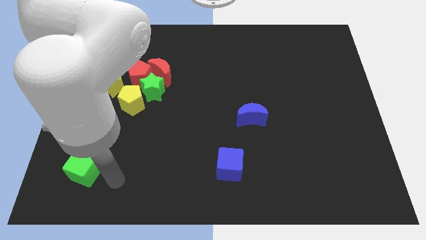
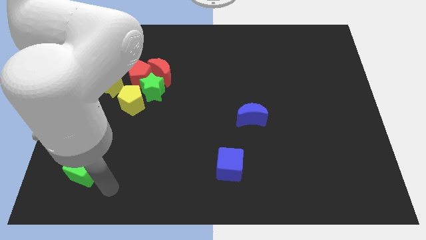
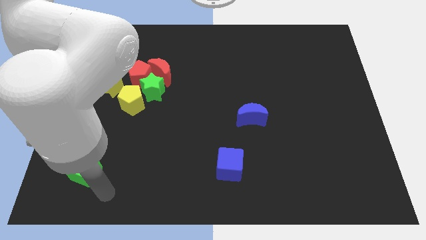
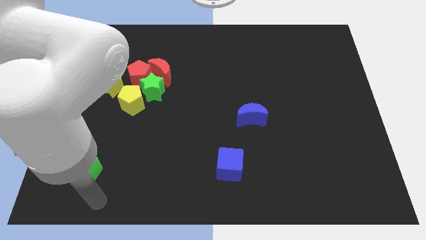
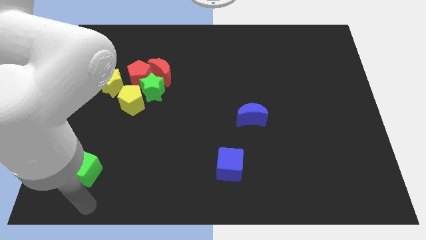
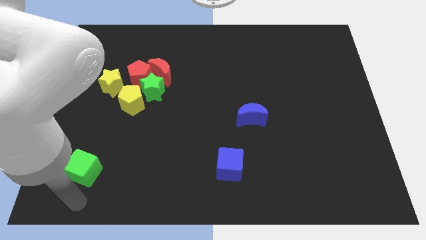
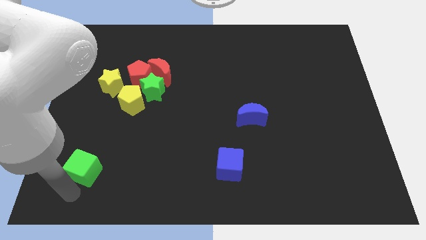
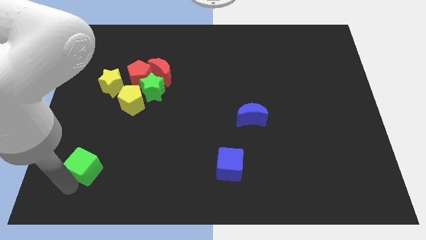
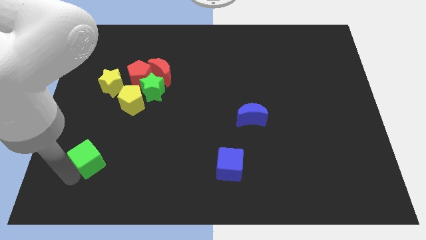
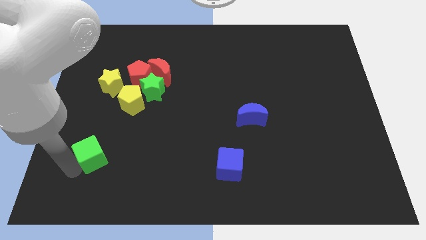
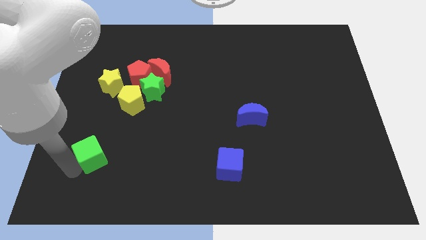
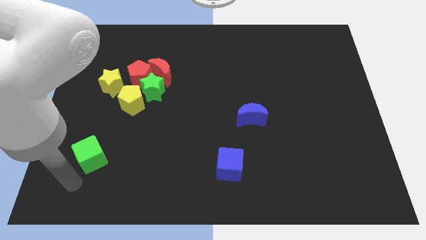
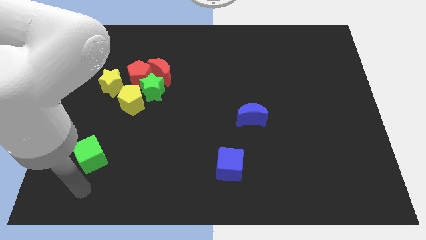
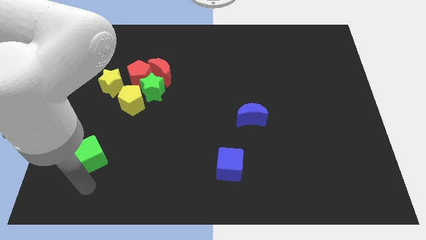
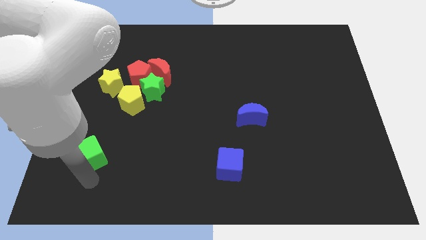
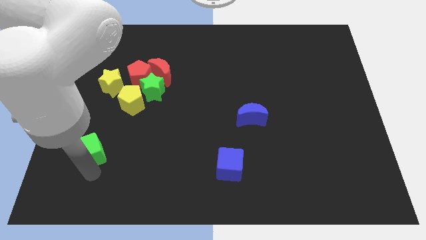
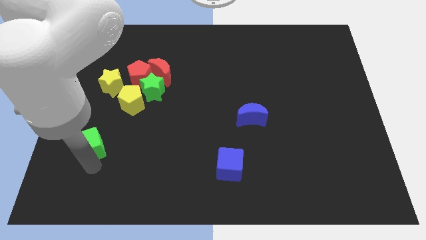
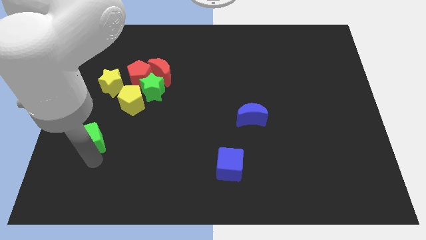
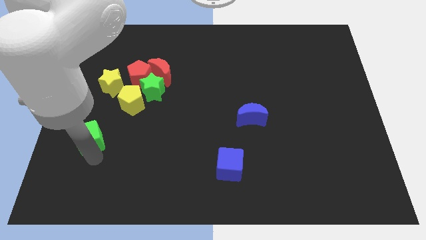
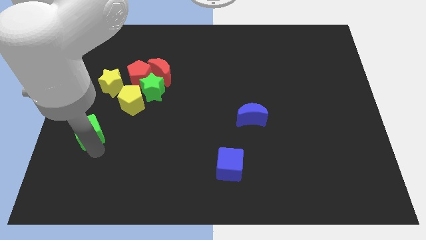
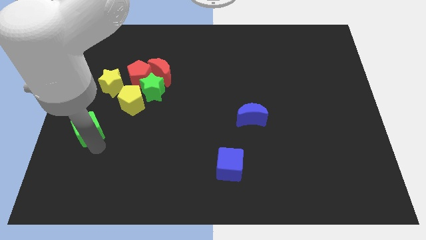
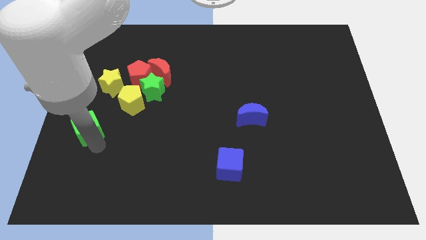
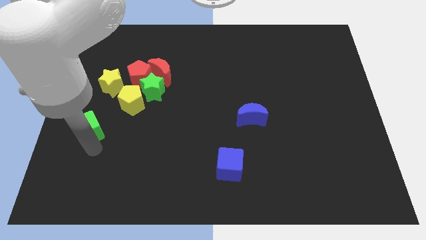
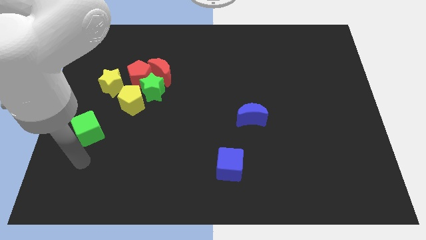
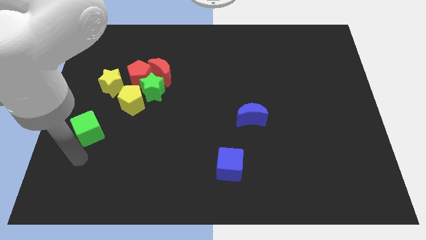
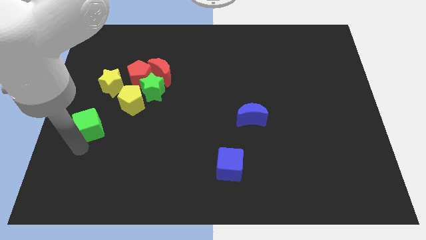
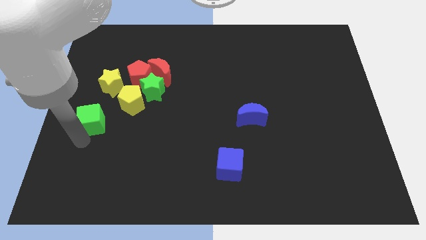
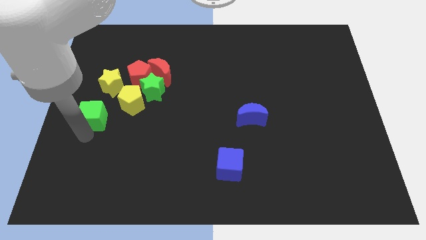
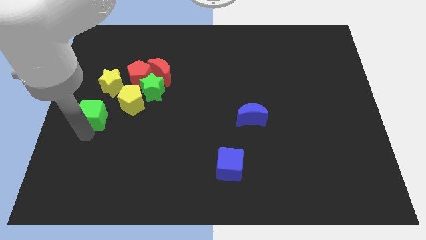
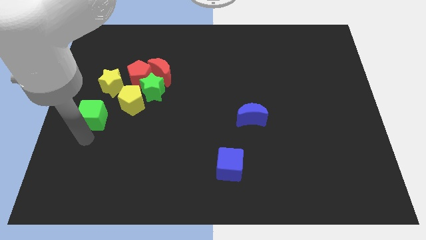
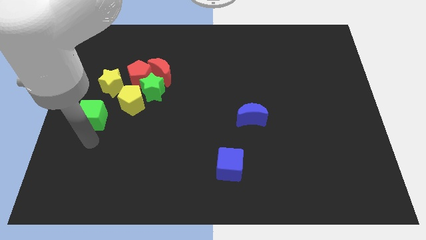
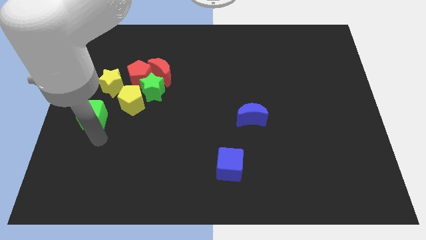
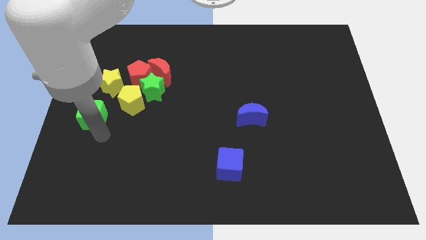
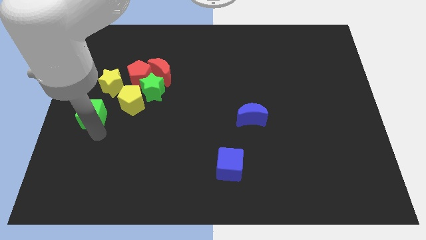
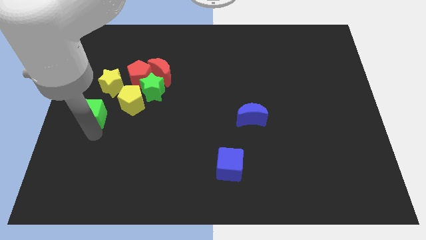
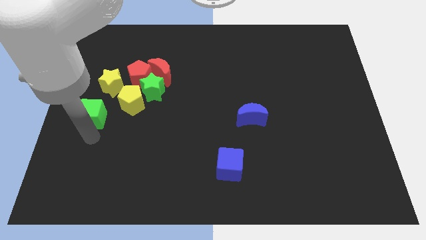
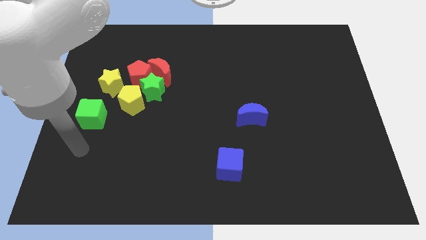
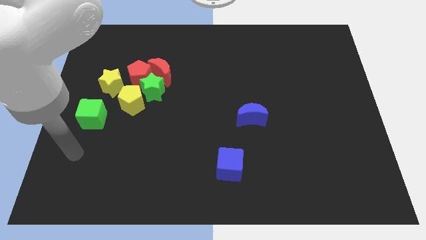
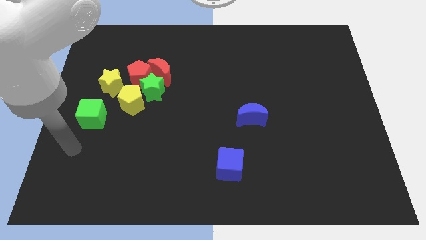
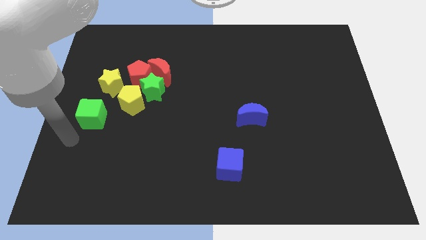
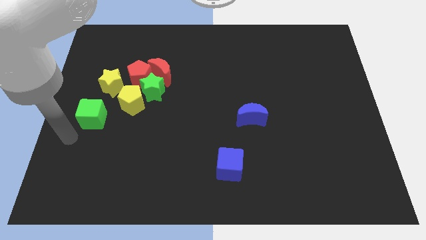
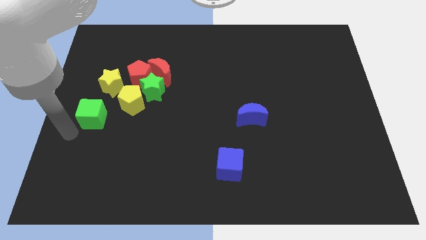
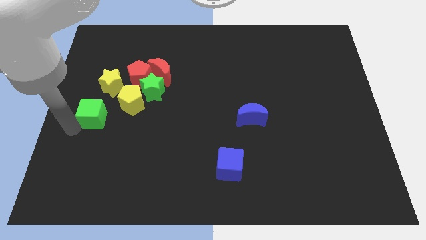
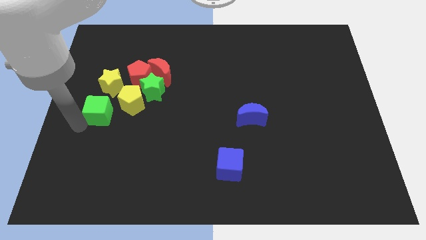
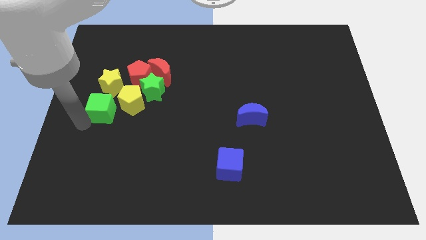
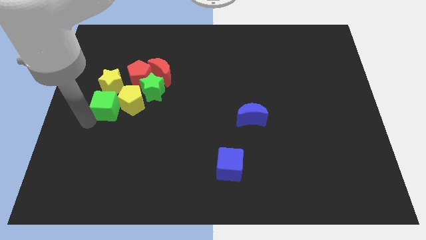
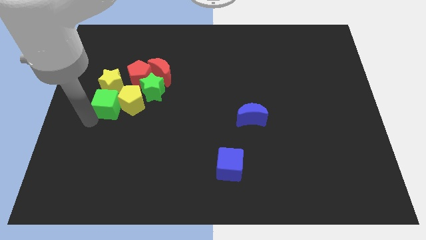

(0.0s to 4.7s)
place the green cube in between the yellow star and the yellow pentagon

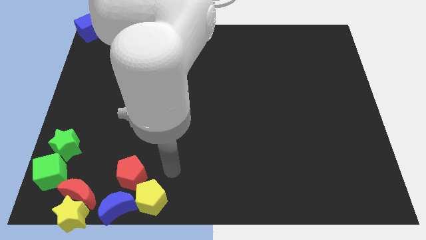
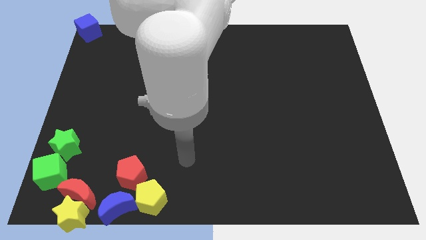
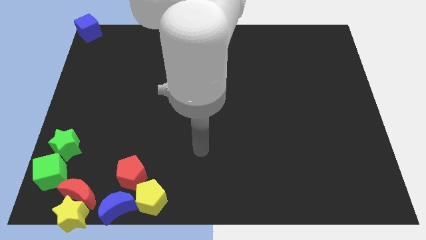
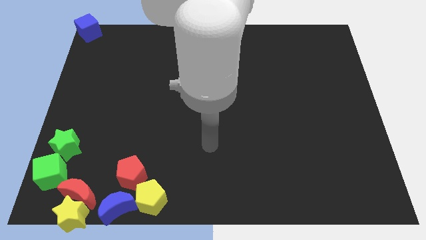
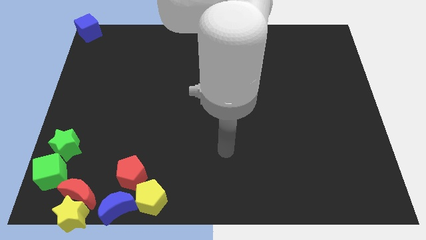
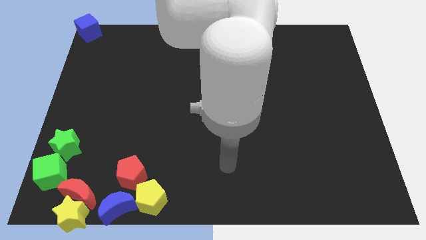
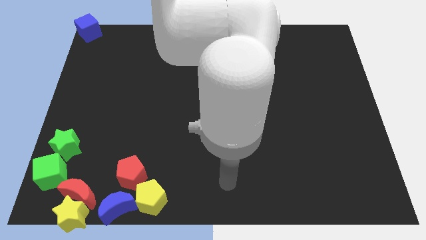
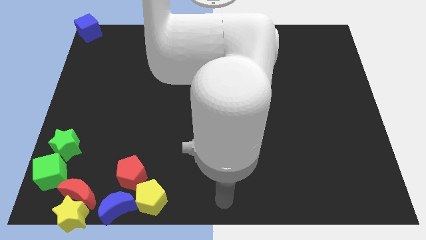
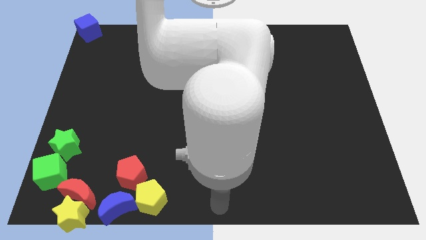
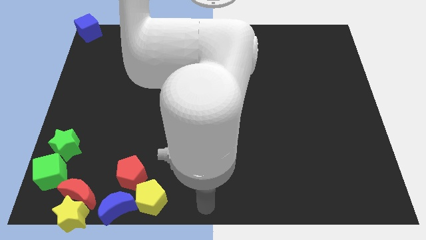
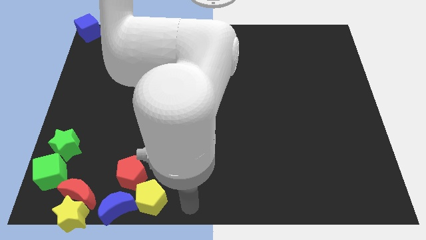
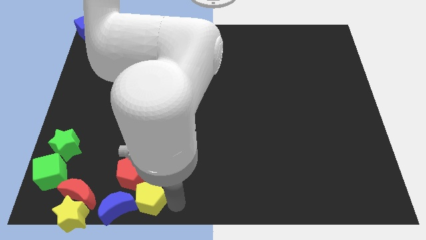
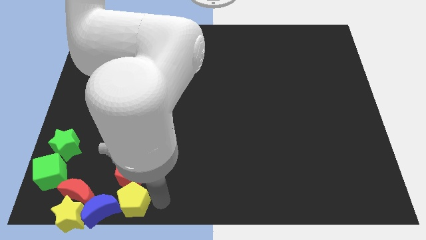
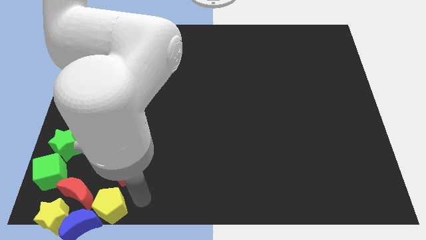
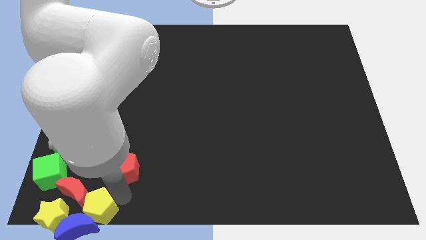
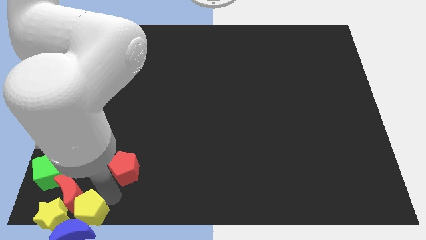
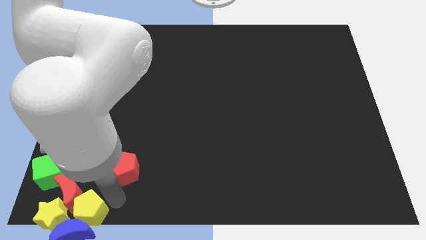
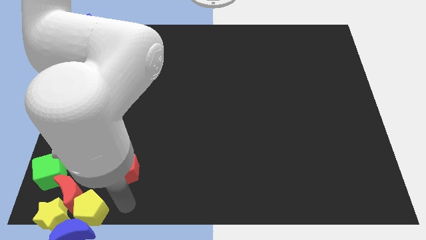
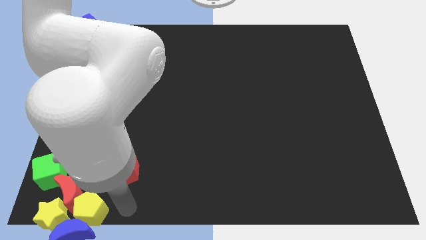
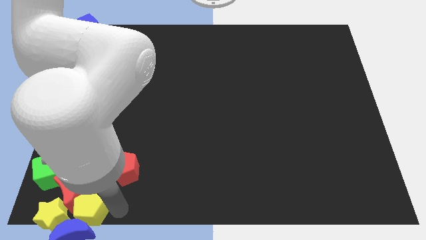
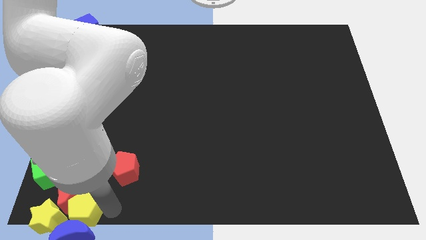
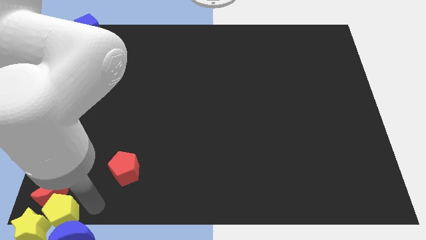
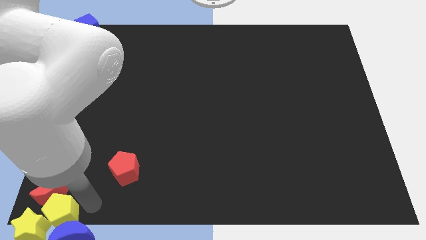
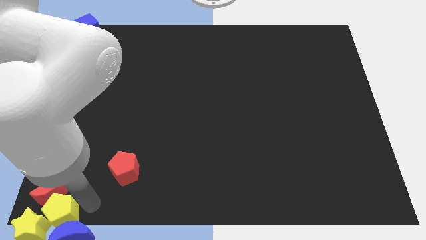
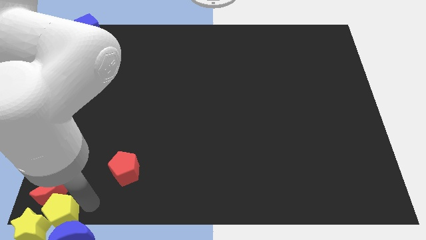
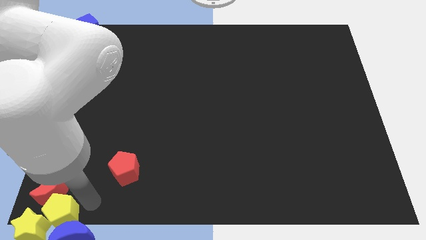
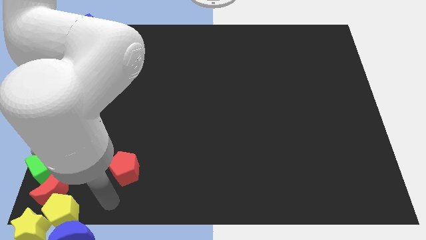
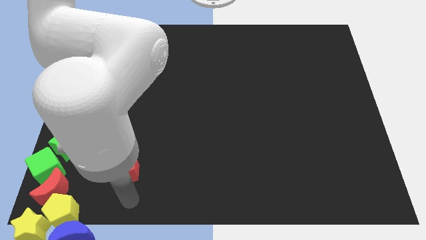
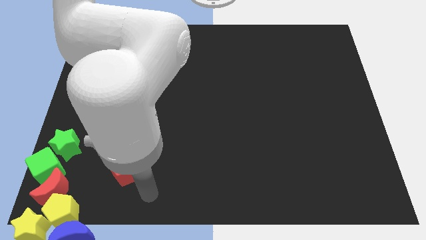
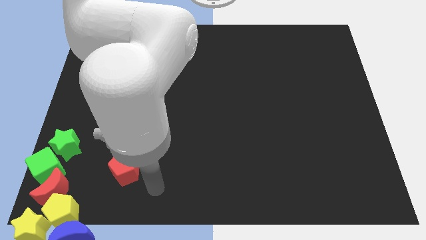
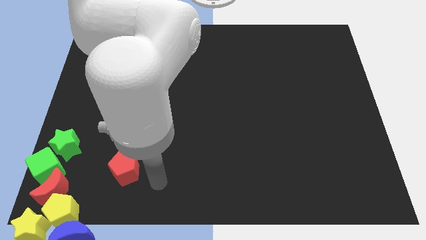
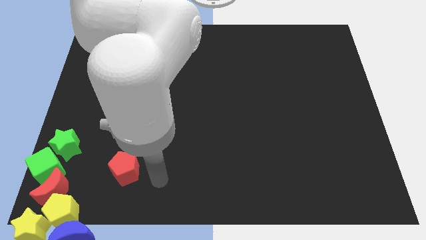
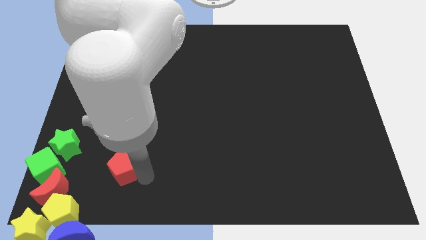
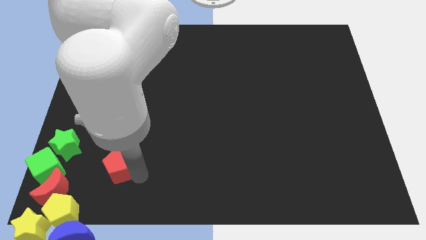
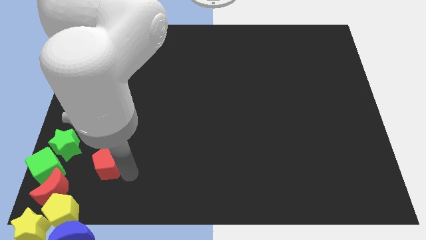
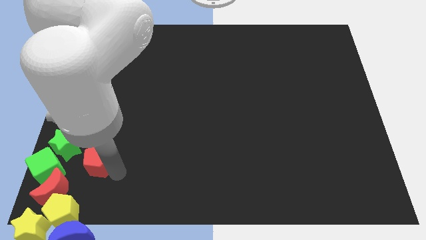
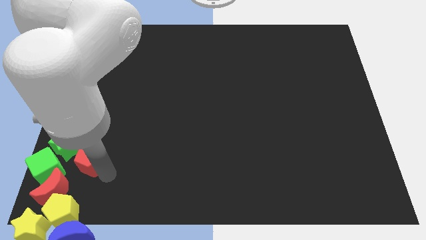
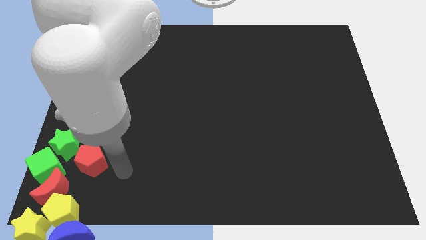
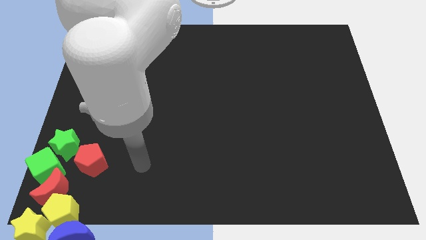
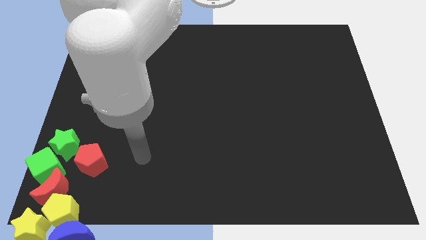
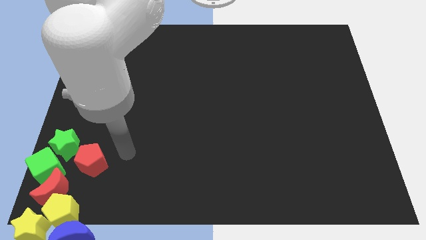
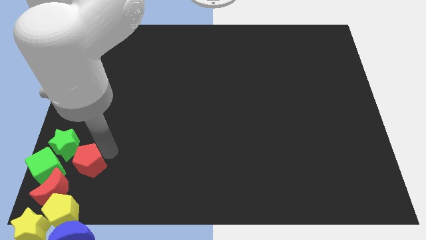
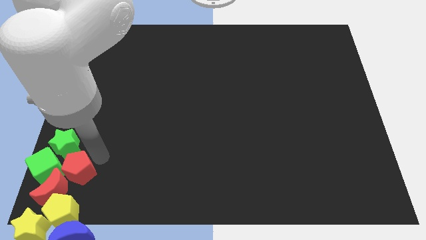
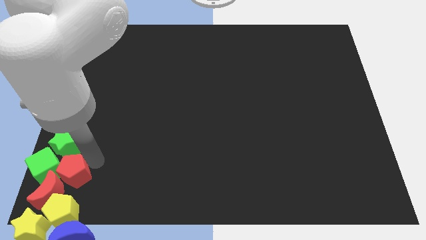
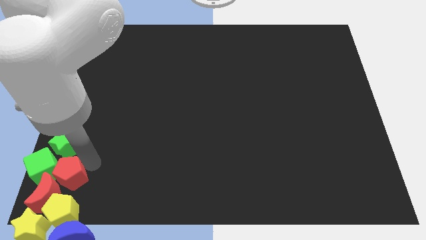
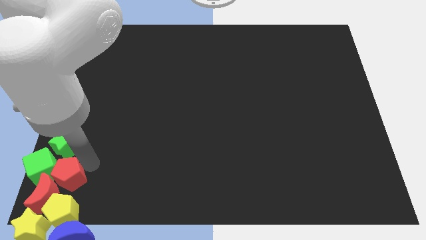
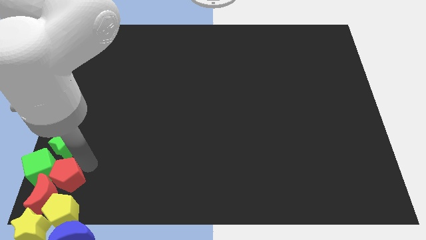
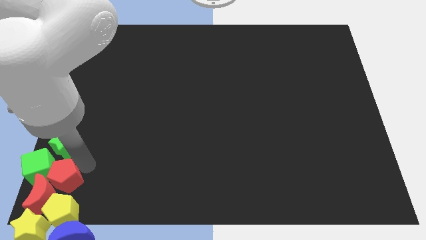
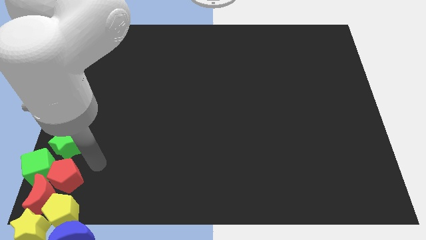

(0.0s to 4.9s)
slide the group of blocks towards the bottom left corner of the board
